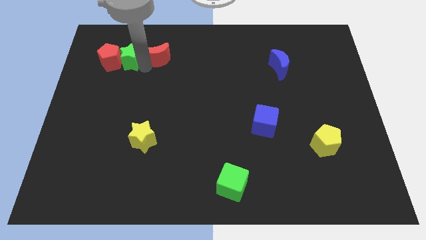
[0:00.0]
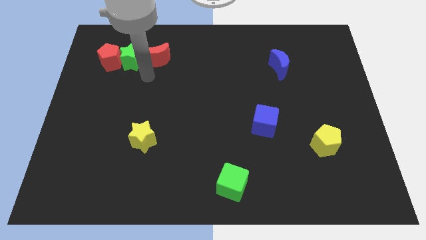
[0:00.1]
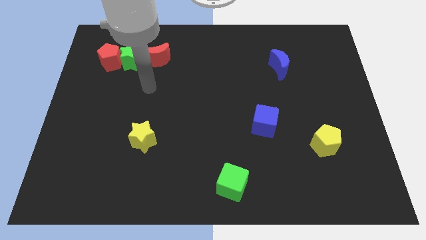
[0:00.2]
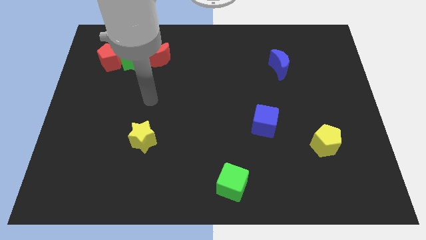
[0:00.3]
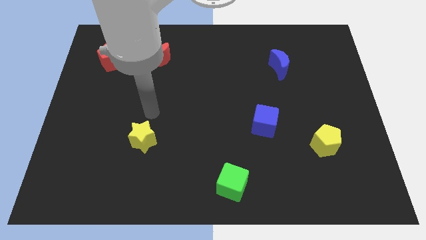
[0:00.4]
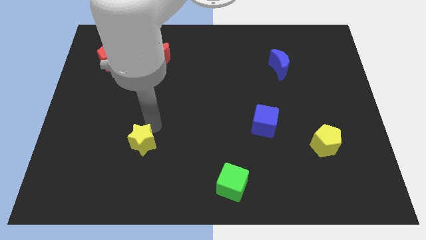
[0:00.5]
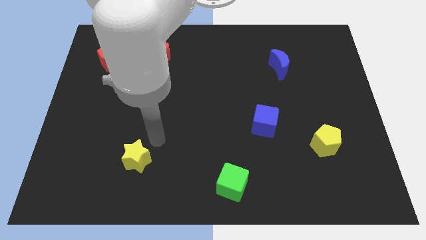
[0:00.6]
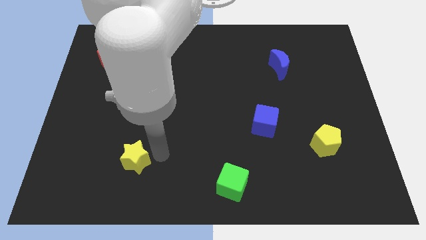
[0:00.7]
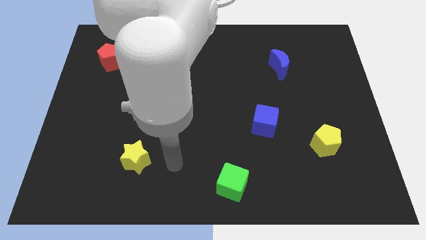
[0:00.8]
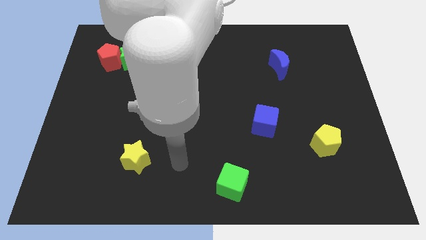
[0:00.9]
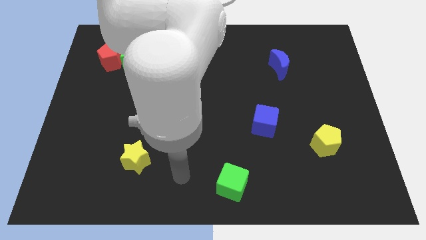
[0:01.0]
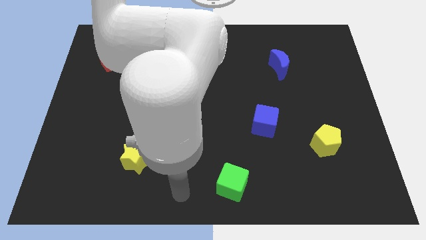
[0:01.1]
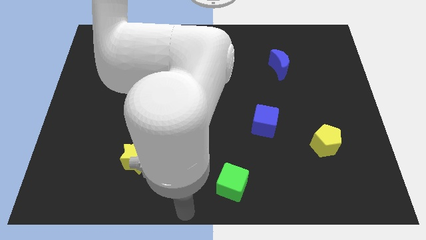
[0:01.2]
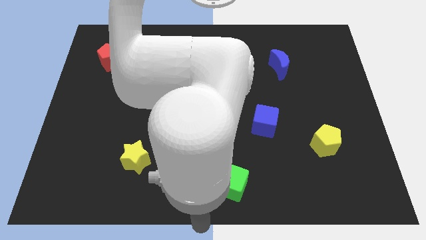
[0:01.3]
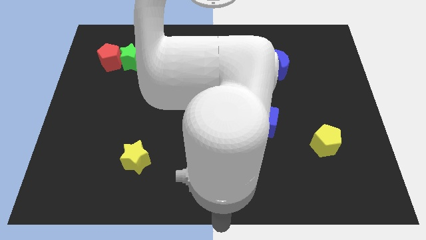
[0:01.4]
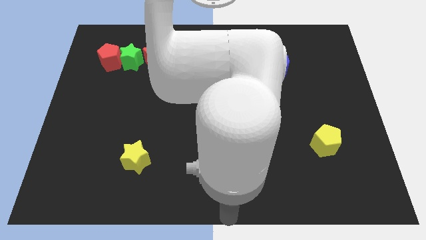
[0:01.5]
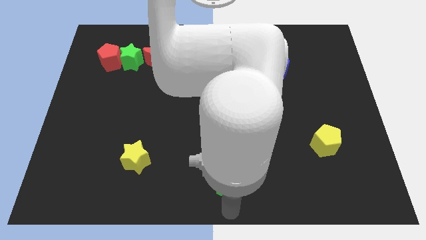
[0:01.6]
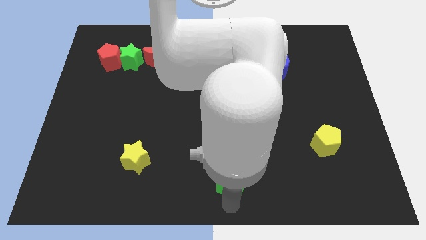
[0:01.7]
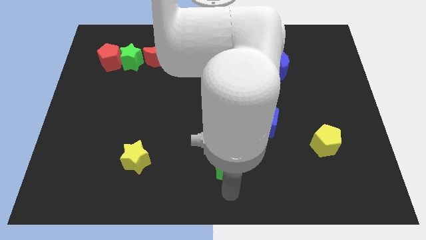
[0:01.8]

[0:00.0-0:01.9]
touch your arm slightly to the green cube

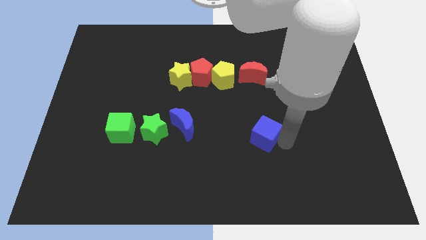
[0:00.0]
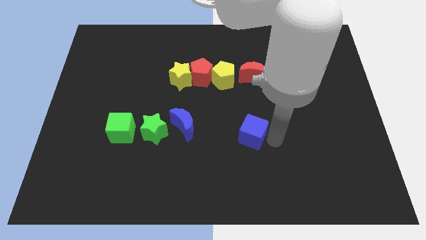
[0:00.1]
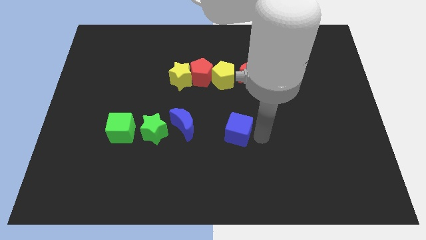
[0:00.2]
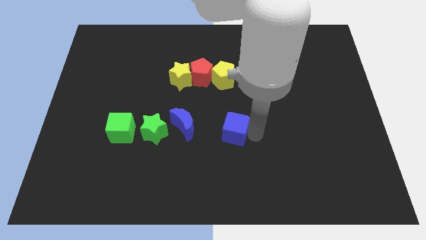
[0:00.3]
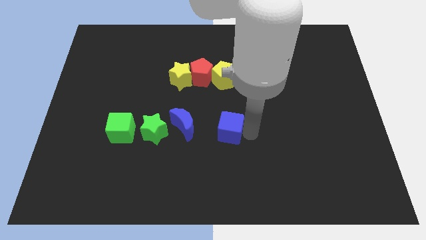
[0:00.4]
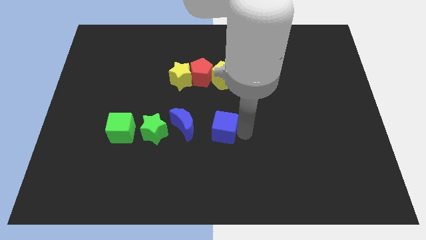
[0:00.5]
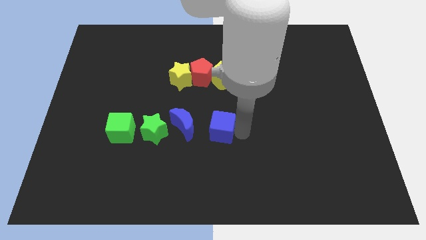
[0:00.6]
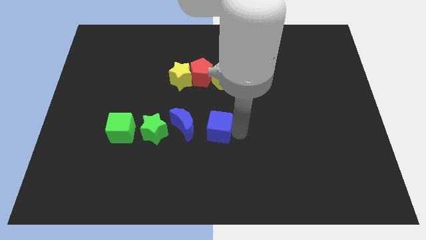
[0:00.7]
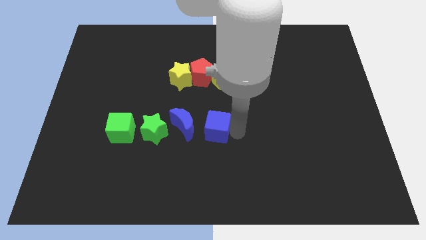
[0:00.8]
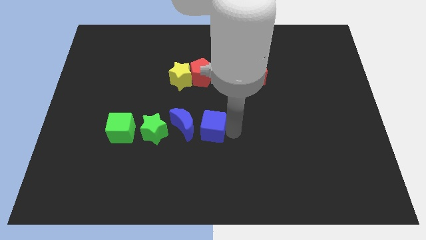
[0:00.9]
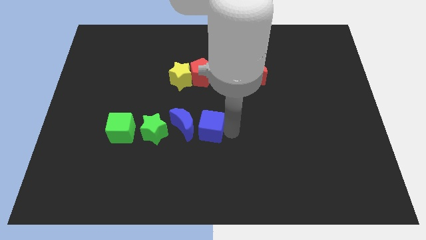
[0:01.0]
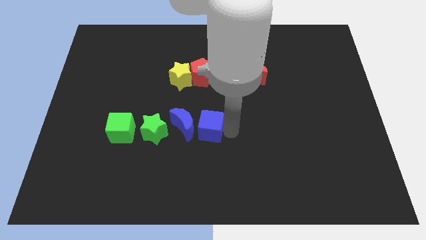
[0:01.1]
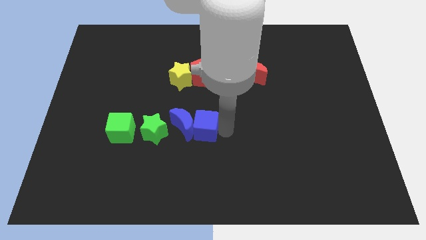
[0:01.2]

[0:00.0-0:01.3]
move the blue cube to the bottom of the red pentagon

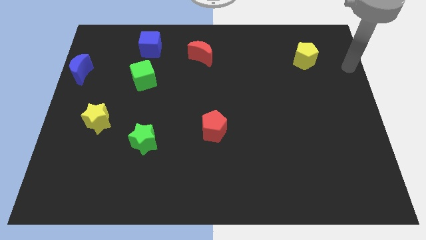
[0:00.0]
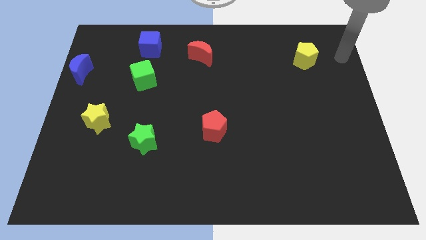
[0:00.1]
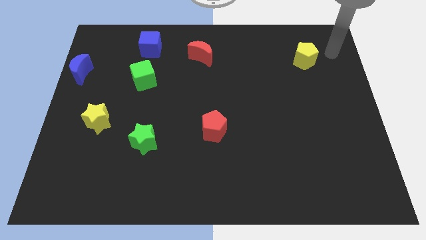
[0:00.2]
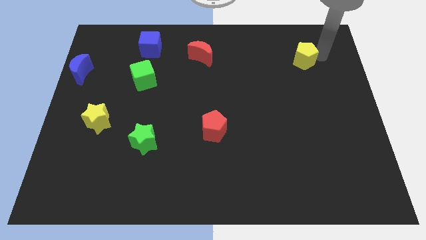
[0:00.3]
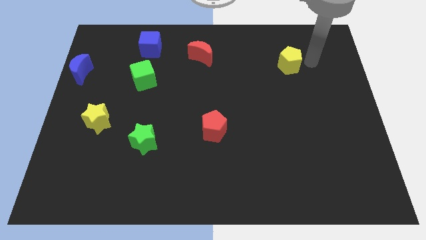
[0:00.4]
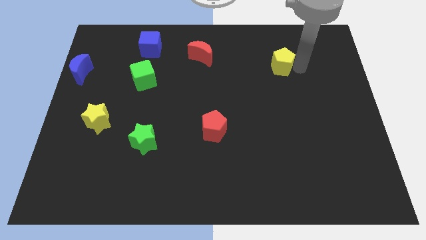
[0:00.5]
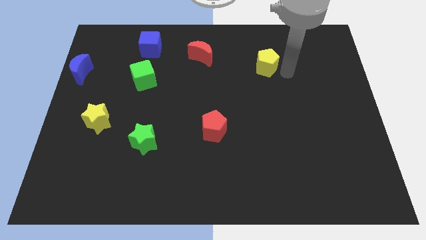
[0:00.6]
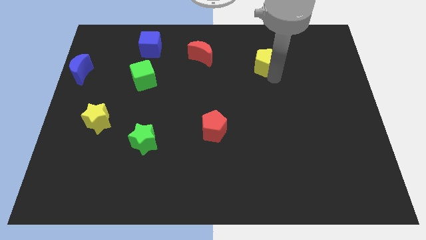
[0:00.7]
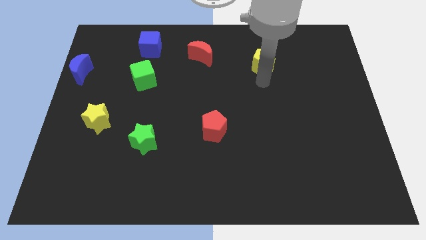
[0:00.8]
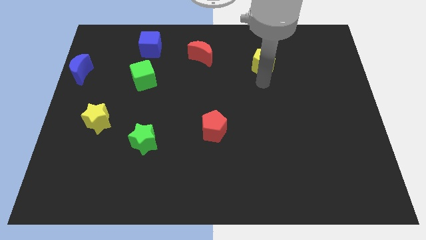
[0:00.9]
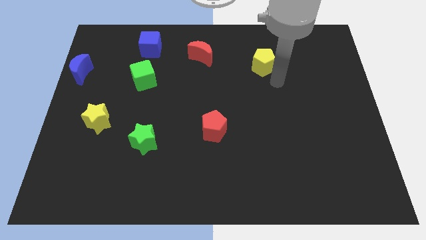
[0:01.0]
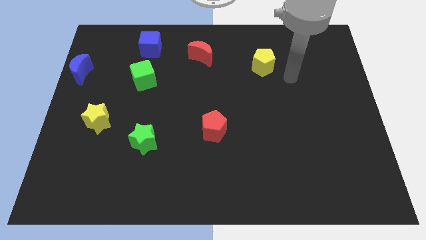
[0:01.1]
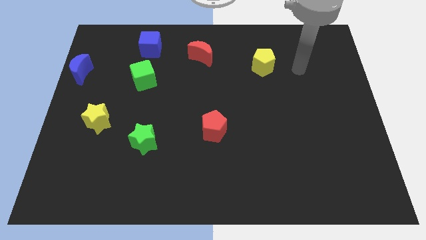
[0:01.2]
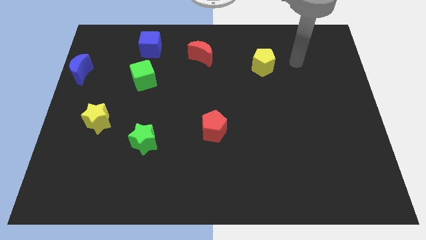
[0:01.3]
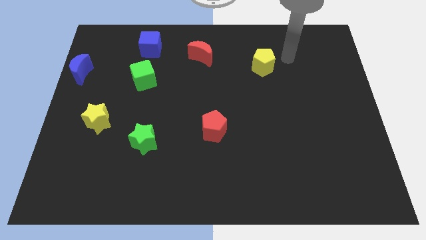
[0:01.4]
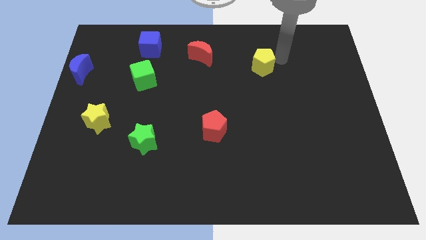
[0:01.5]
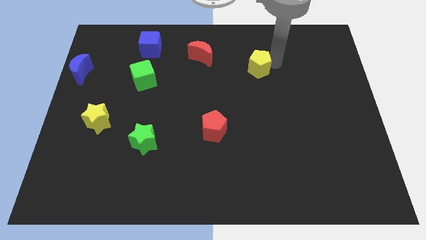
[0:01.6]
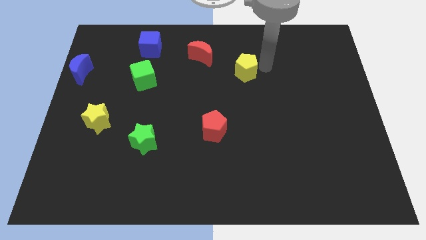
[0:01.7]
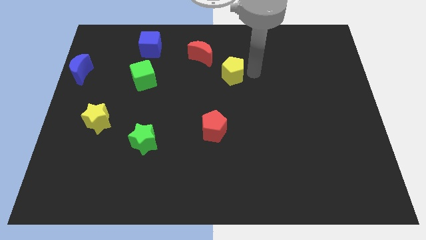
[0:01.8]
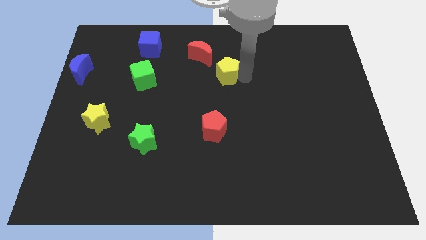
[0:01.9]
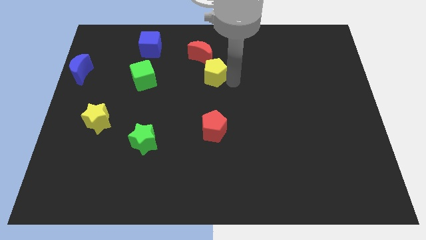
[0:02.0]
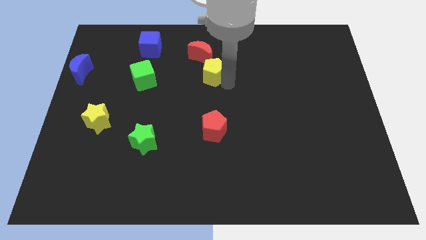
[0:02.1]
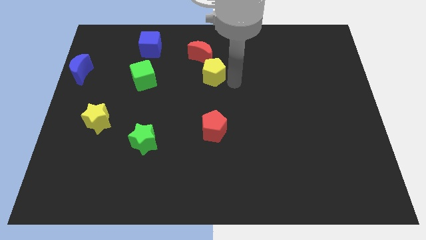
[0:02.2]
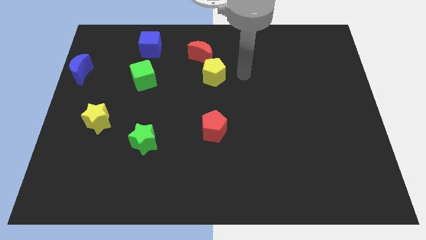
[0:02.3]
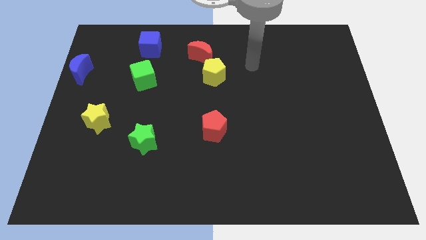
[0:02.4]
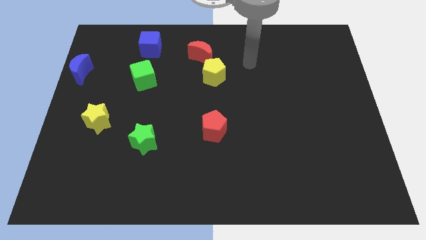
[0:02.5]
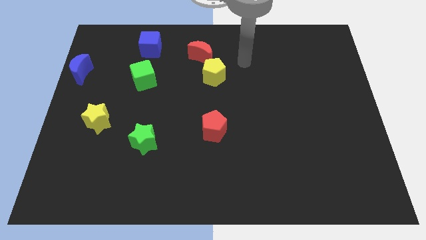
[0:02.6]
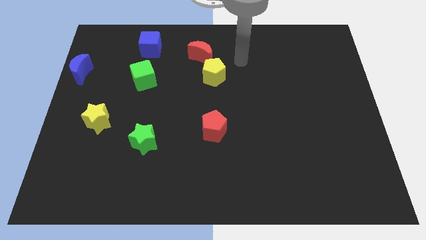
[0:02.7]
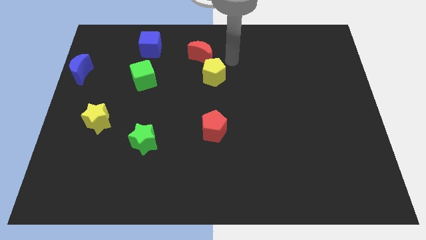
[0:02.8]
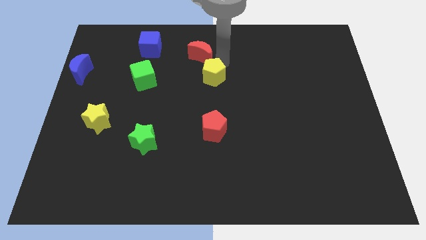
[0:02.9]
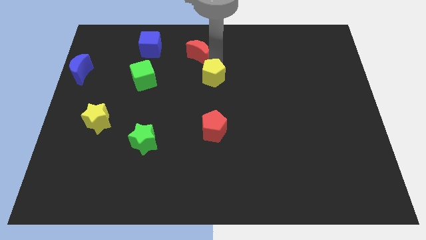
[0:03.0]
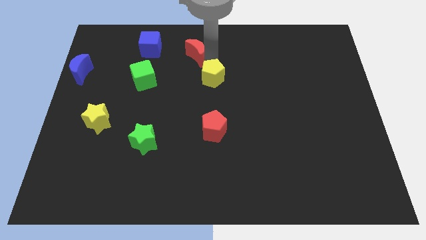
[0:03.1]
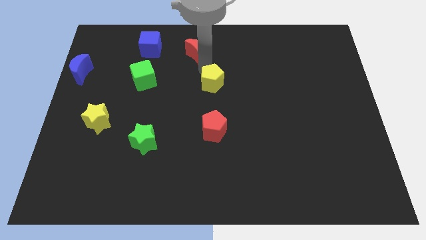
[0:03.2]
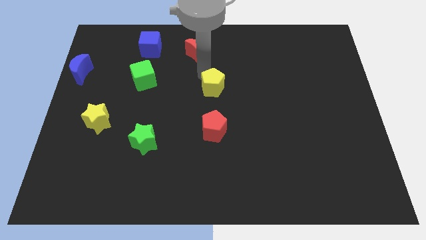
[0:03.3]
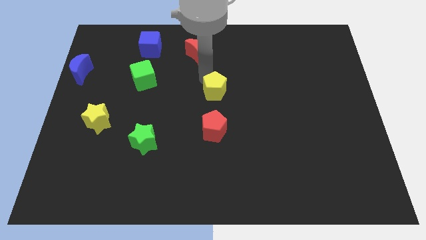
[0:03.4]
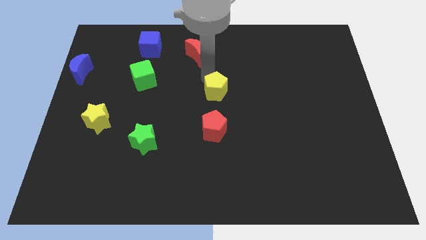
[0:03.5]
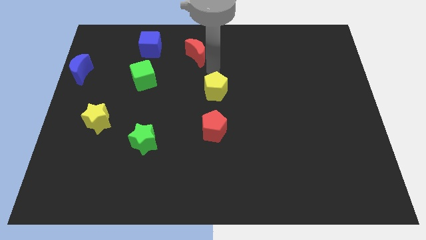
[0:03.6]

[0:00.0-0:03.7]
move the yellow pentagon to the center of the board

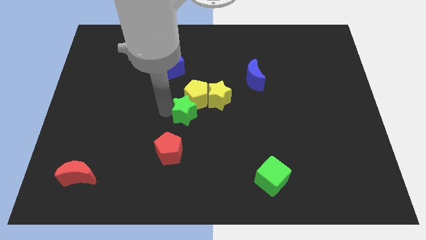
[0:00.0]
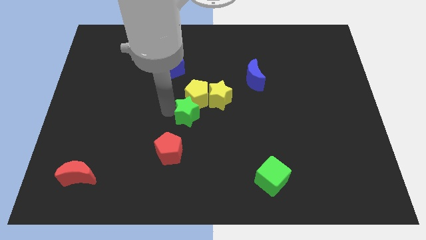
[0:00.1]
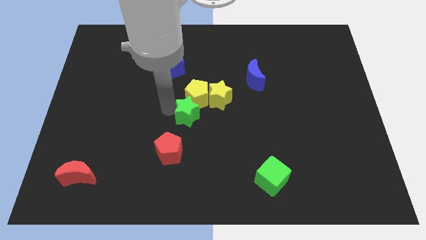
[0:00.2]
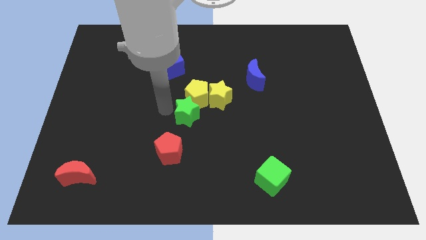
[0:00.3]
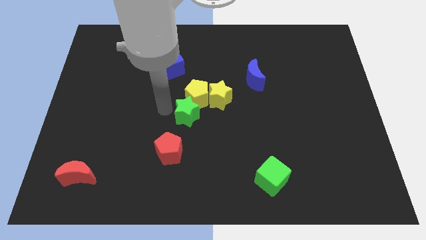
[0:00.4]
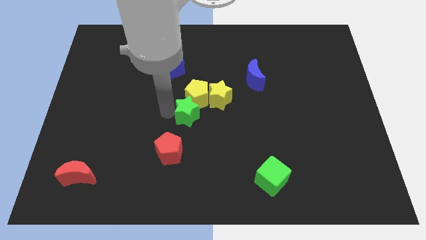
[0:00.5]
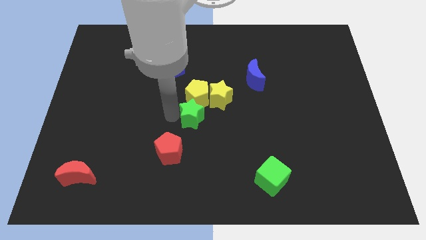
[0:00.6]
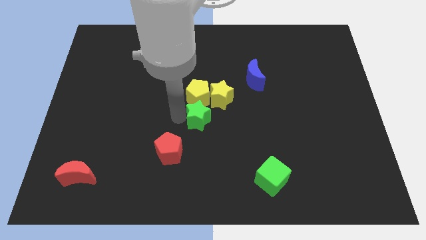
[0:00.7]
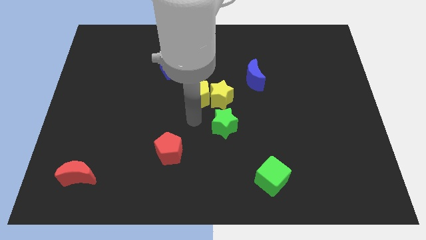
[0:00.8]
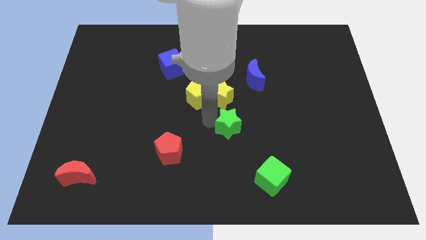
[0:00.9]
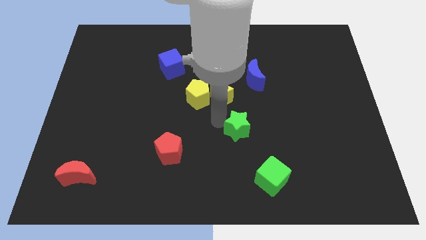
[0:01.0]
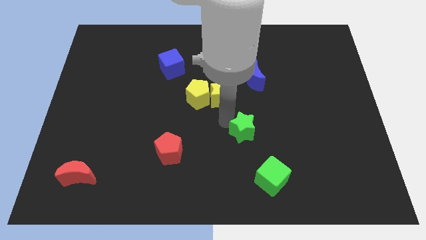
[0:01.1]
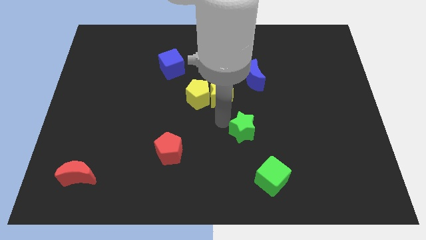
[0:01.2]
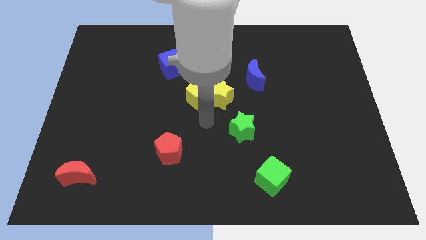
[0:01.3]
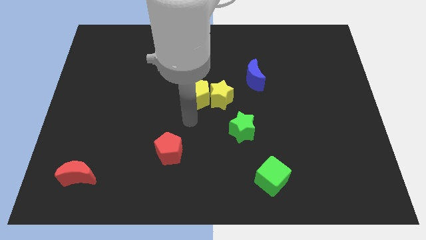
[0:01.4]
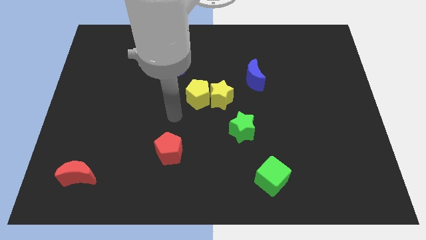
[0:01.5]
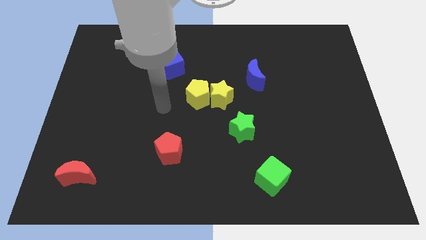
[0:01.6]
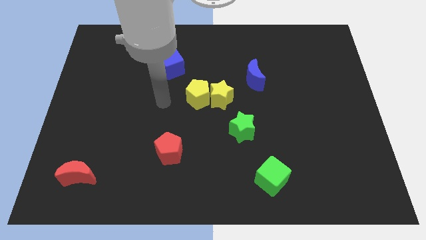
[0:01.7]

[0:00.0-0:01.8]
move green star diagonally bottom right to the yellow star

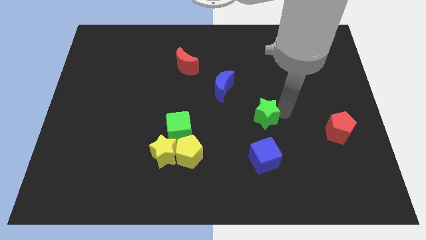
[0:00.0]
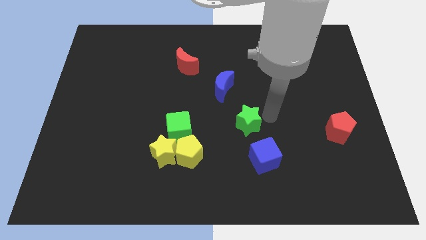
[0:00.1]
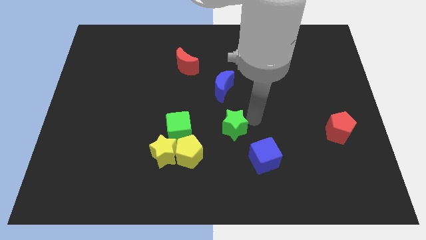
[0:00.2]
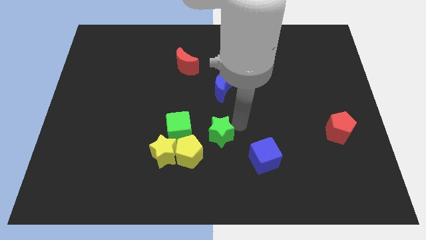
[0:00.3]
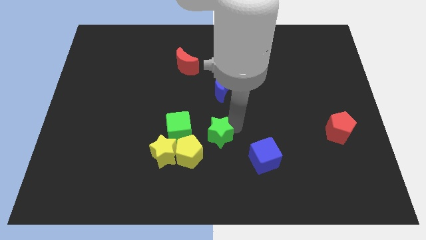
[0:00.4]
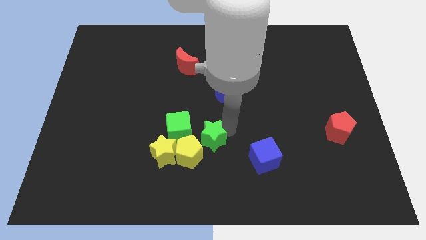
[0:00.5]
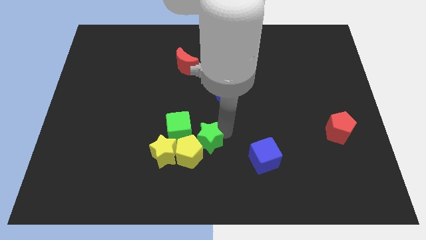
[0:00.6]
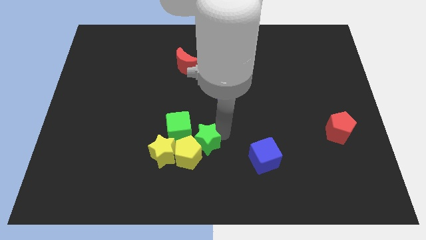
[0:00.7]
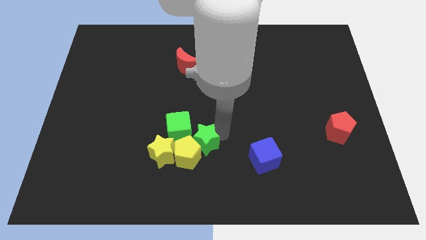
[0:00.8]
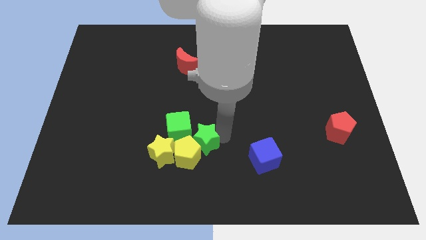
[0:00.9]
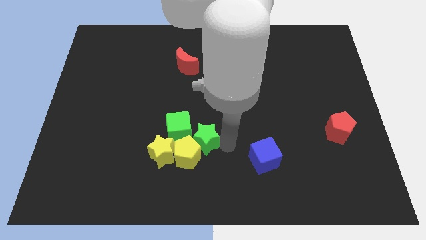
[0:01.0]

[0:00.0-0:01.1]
make the green star to touch the top side of the yellow pentagon
